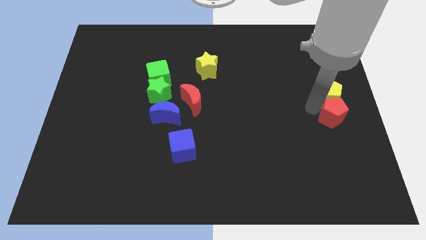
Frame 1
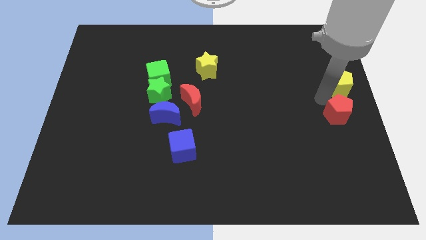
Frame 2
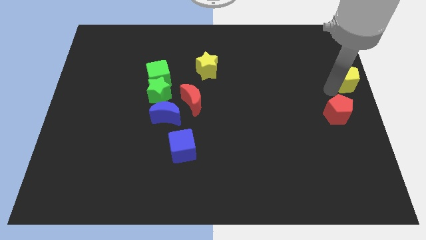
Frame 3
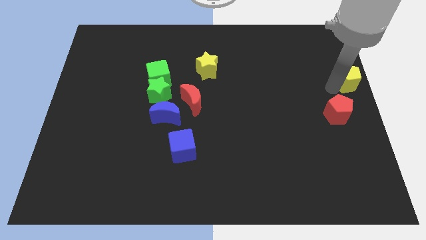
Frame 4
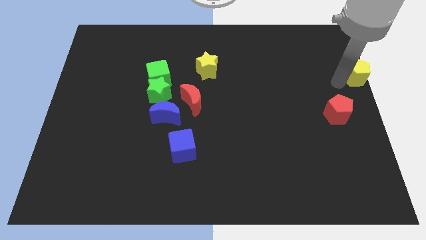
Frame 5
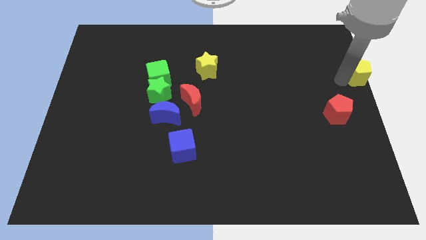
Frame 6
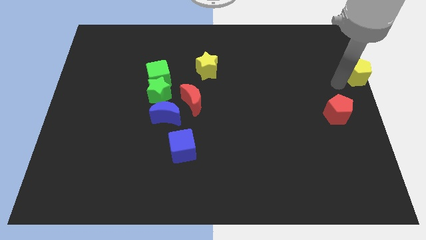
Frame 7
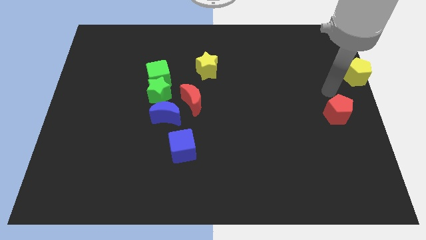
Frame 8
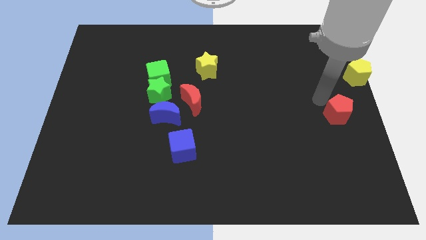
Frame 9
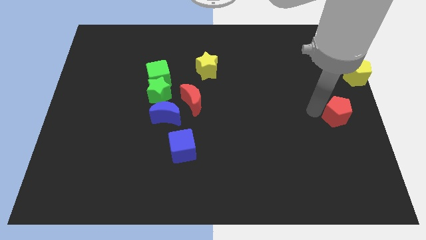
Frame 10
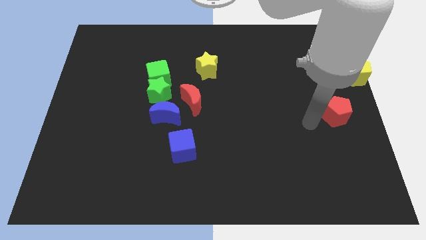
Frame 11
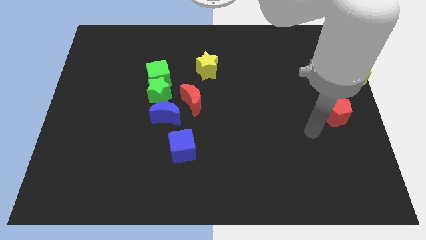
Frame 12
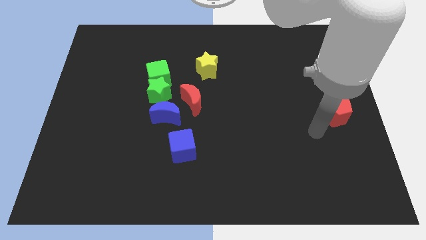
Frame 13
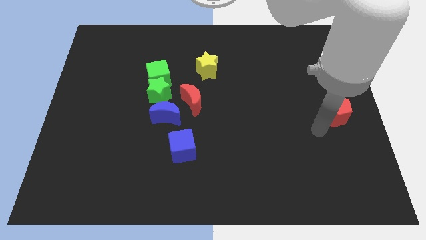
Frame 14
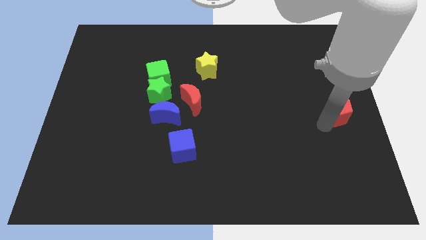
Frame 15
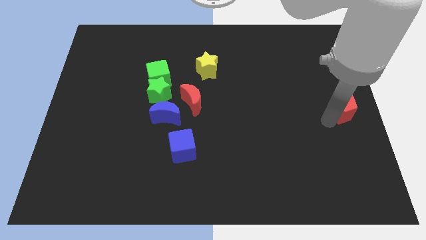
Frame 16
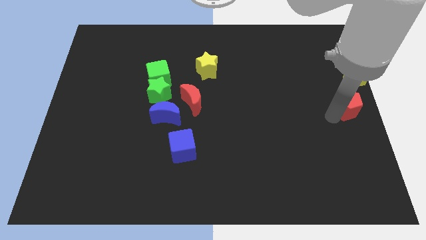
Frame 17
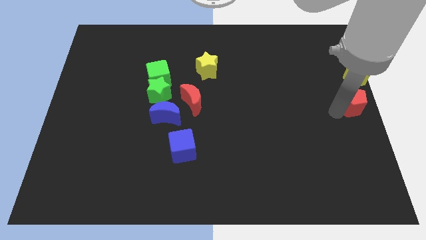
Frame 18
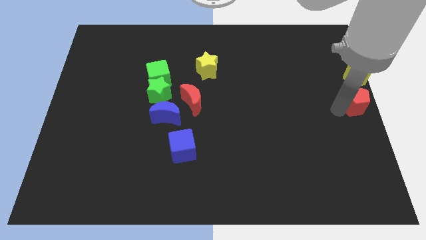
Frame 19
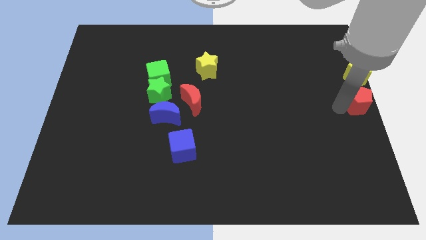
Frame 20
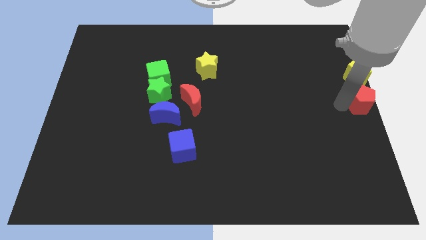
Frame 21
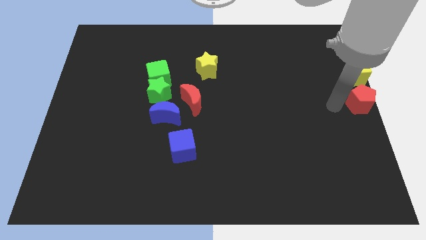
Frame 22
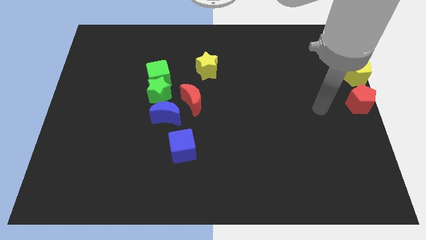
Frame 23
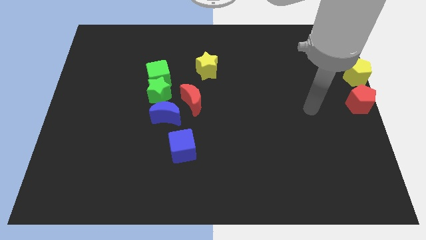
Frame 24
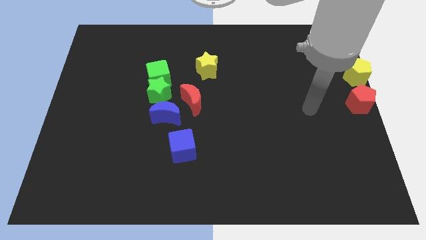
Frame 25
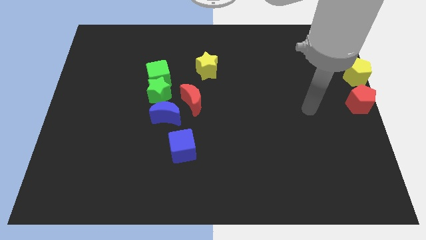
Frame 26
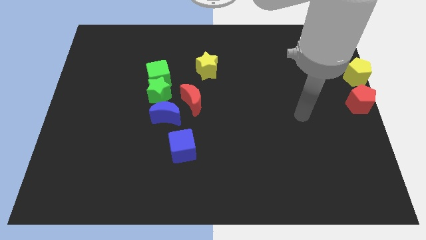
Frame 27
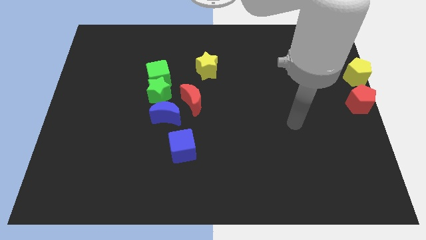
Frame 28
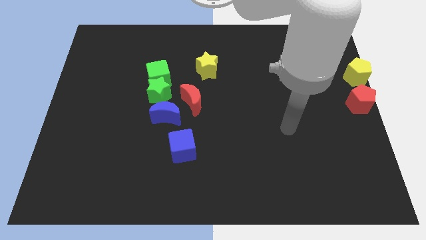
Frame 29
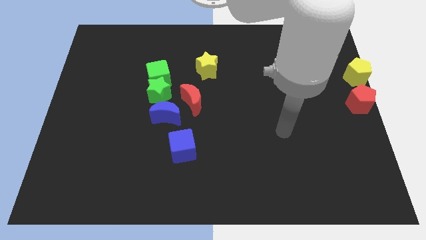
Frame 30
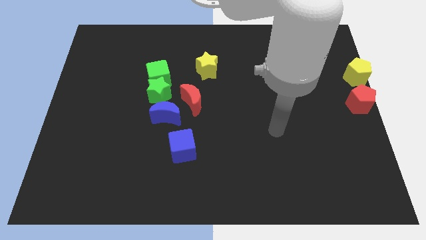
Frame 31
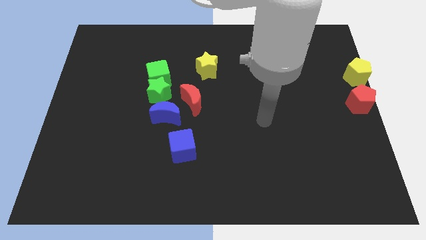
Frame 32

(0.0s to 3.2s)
push red pentagon and yellow pentagon parallel to group of blocks

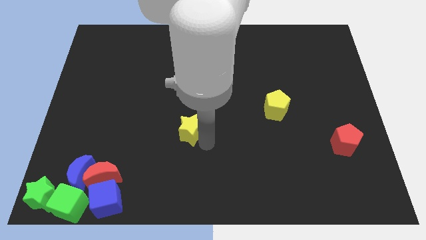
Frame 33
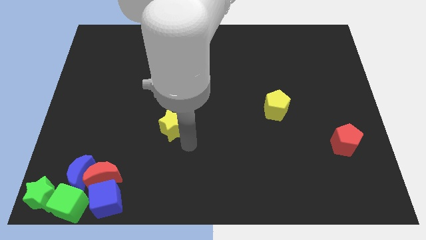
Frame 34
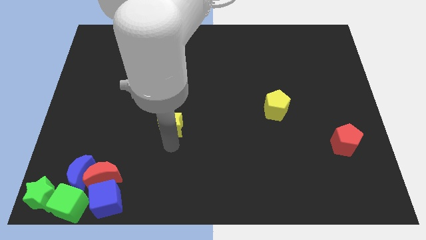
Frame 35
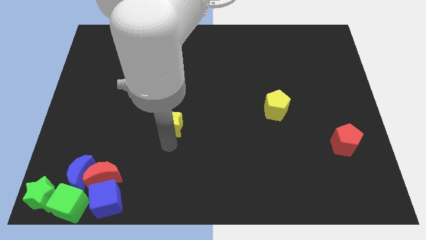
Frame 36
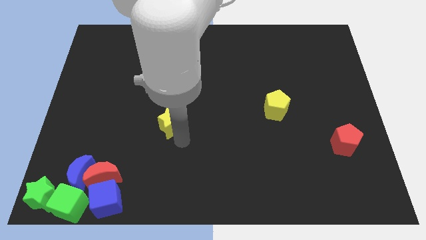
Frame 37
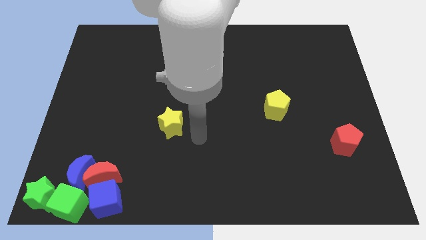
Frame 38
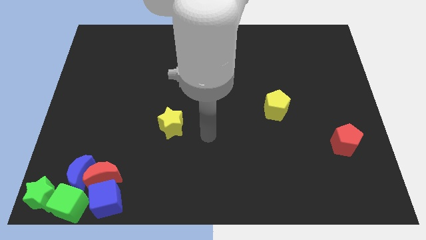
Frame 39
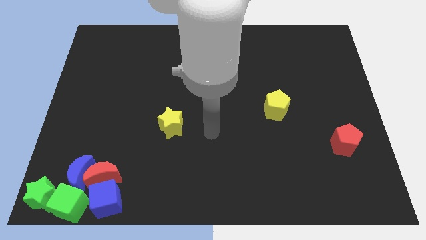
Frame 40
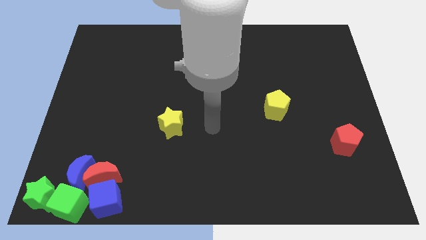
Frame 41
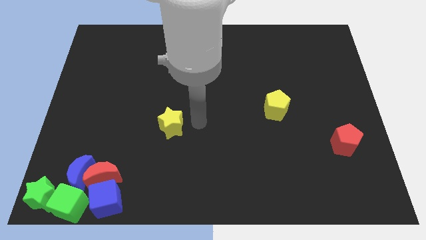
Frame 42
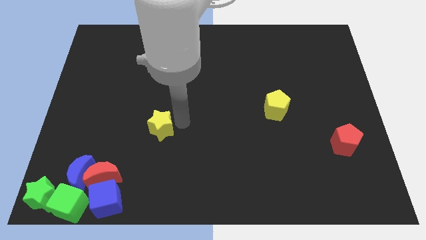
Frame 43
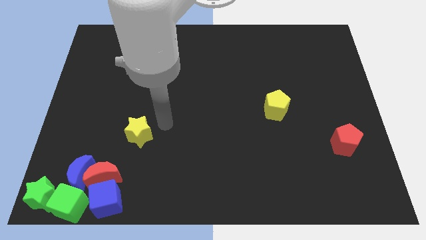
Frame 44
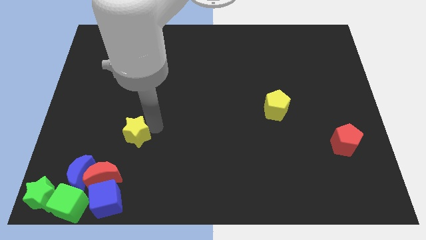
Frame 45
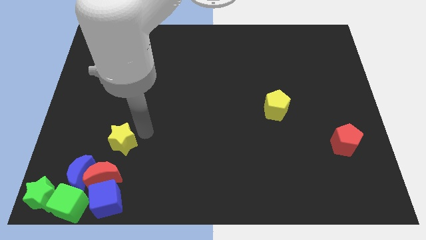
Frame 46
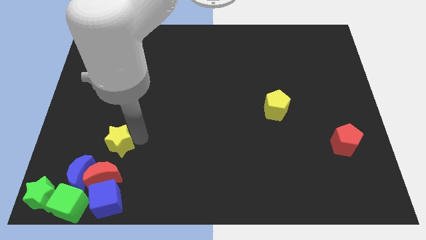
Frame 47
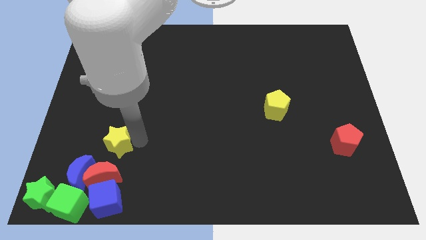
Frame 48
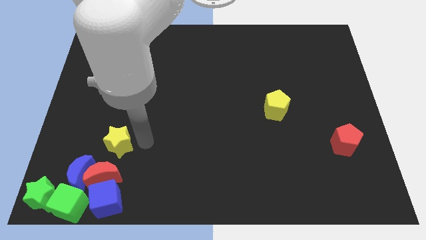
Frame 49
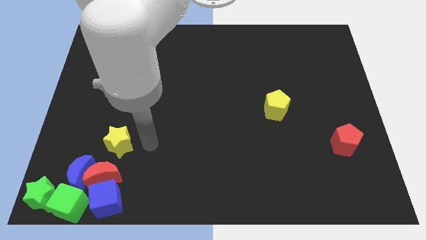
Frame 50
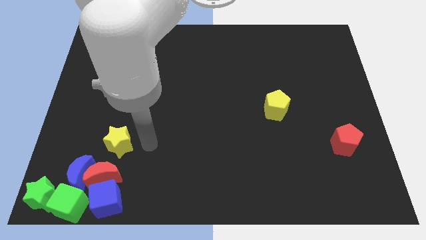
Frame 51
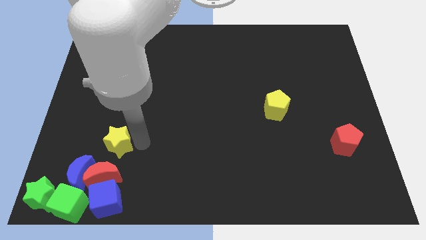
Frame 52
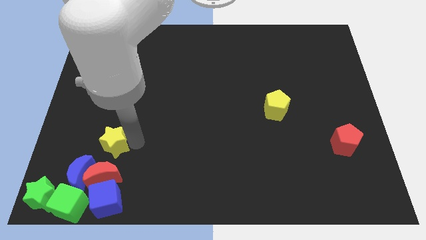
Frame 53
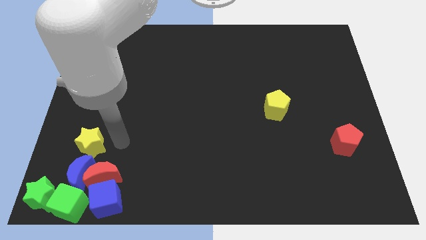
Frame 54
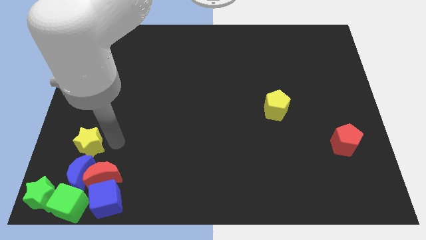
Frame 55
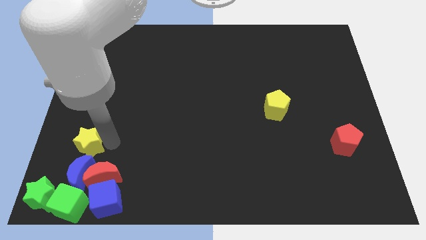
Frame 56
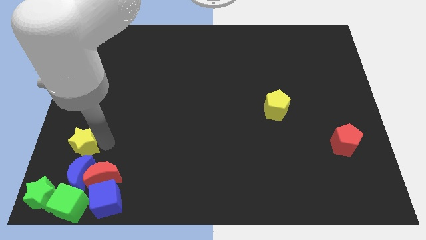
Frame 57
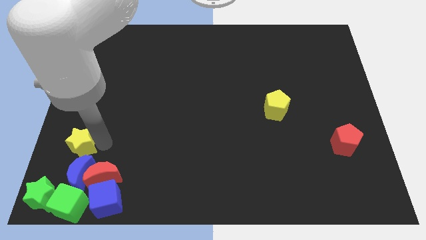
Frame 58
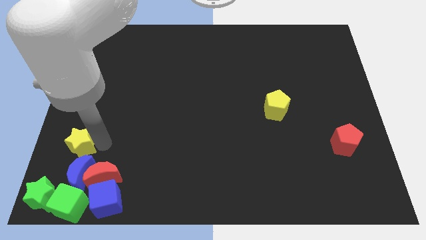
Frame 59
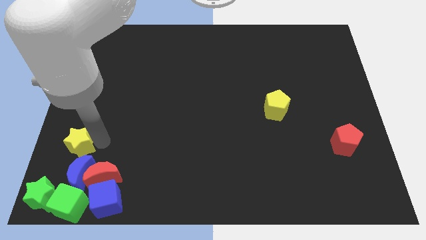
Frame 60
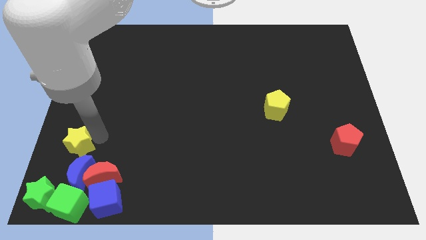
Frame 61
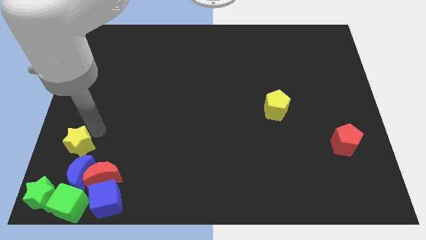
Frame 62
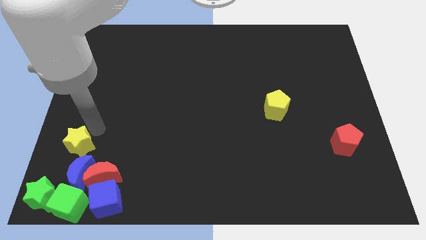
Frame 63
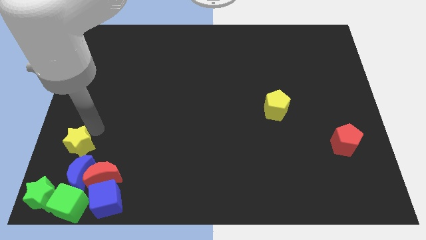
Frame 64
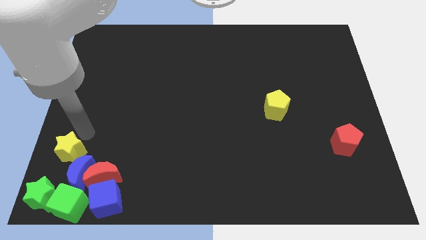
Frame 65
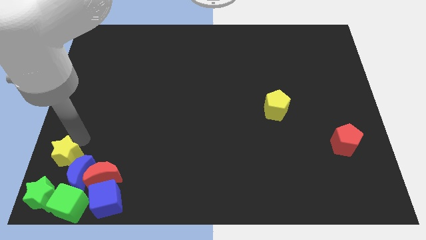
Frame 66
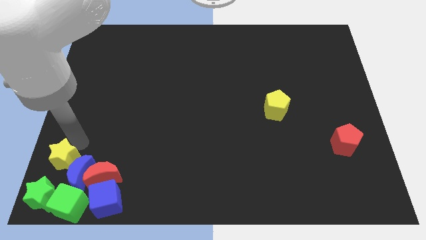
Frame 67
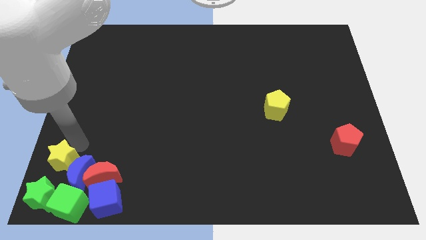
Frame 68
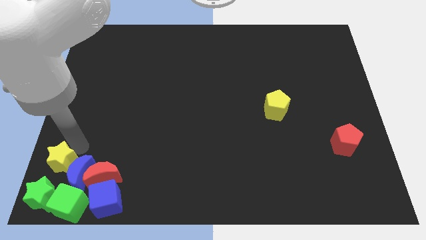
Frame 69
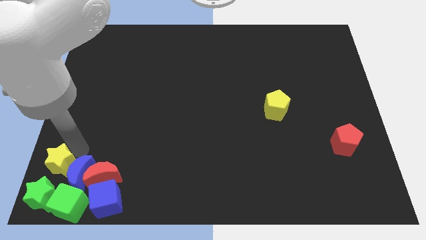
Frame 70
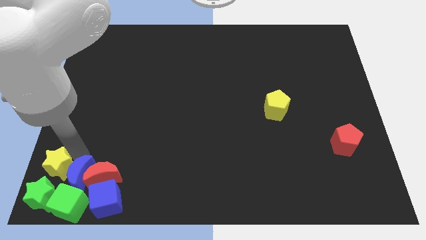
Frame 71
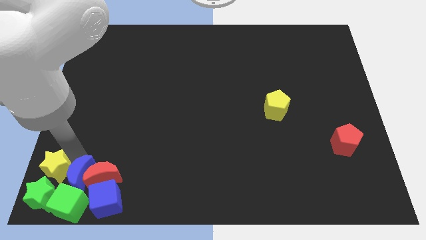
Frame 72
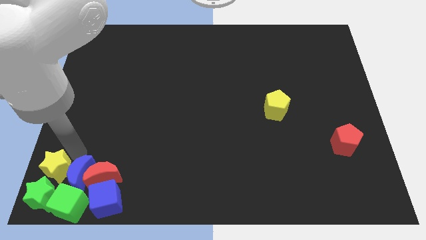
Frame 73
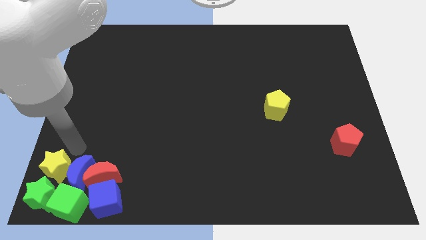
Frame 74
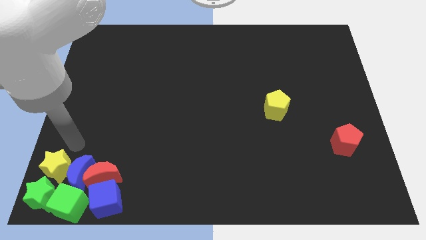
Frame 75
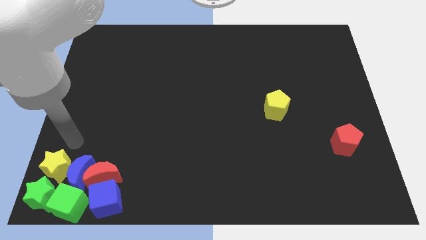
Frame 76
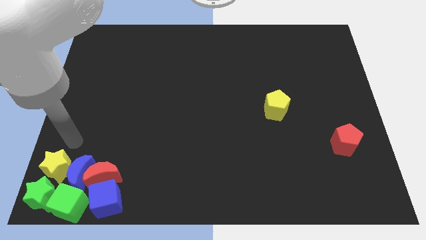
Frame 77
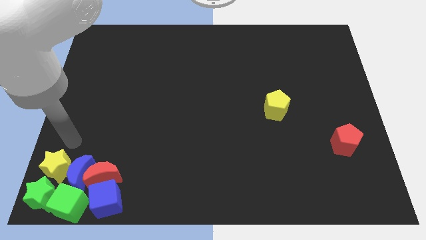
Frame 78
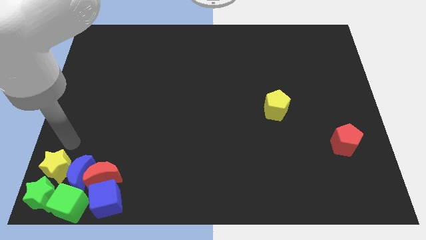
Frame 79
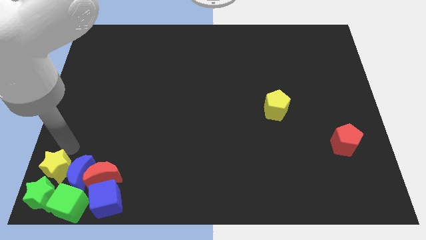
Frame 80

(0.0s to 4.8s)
slide the yellow star above the green star

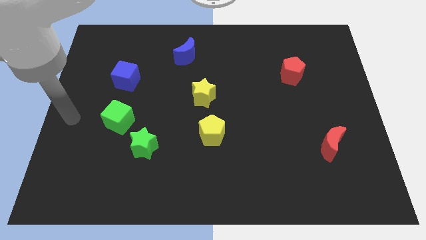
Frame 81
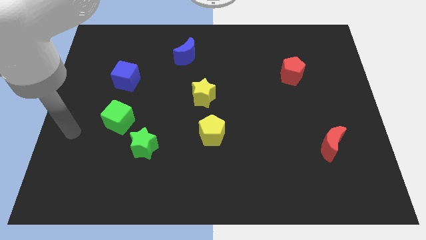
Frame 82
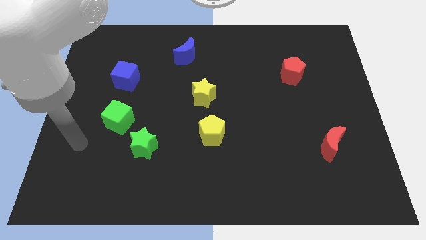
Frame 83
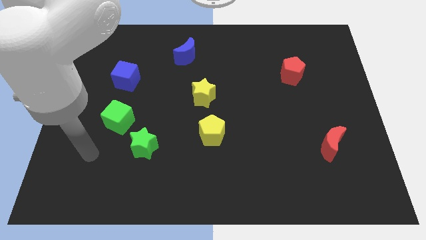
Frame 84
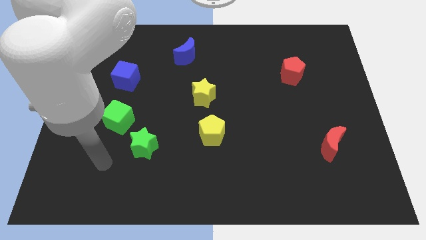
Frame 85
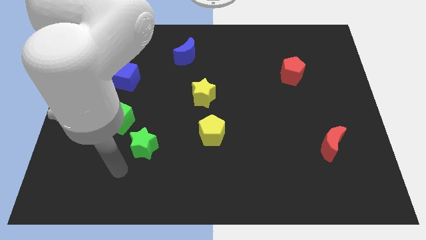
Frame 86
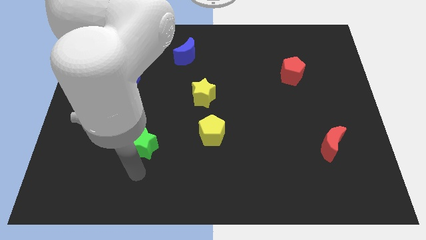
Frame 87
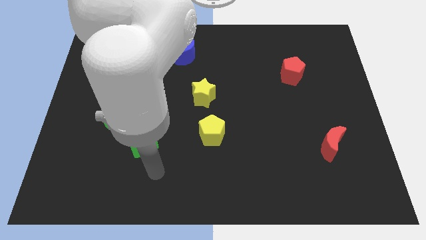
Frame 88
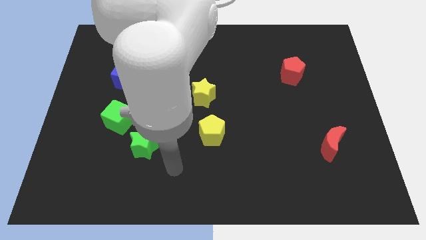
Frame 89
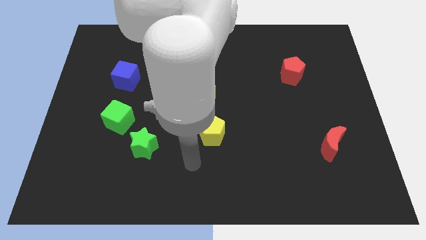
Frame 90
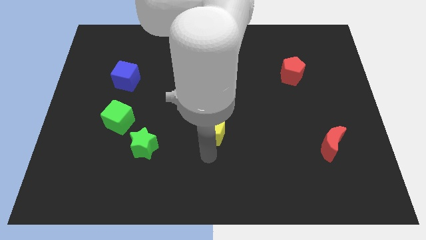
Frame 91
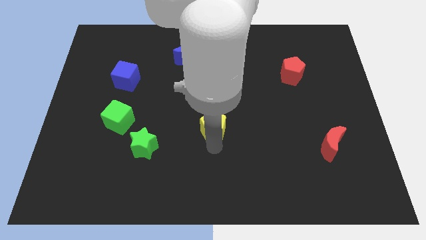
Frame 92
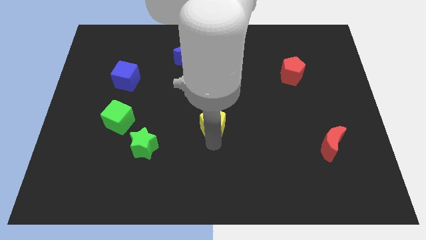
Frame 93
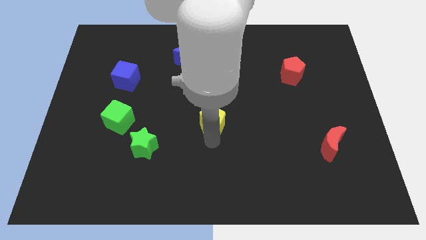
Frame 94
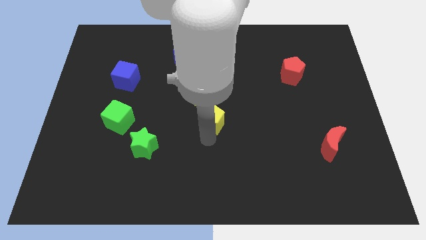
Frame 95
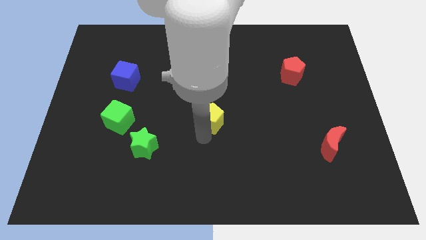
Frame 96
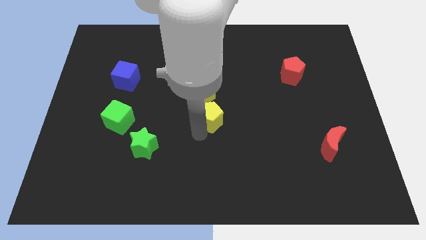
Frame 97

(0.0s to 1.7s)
push the yellow pentagon slightly up
